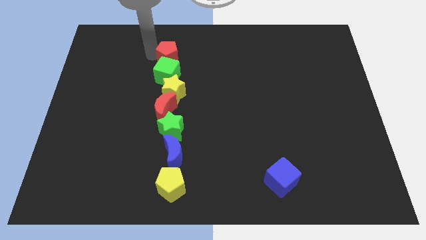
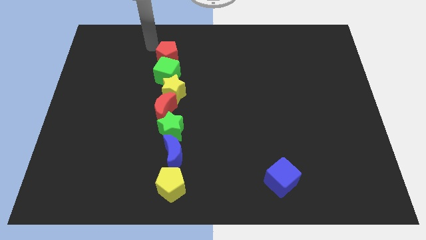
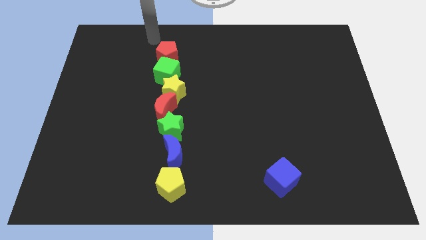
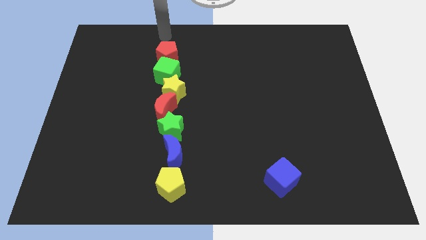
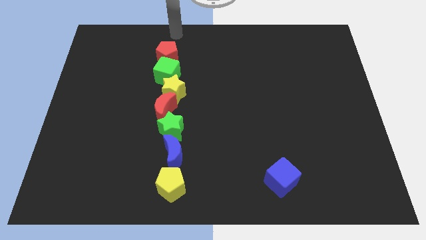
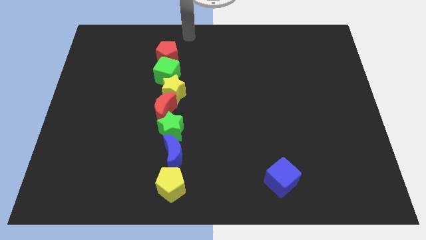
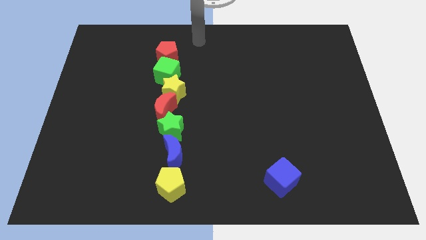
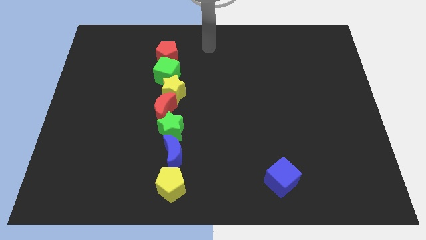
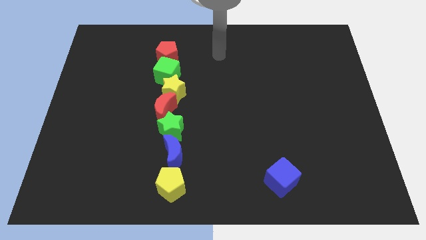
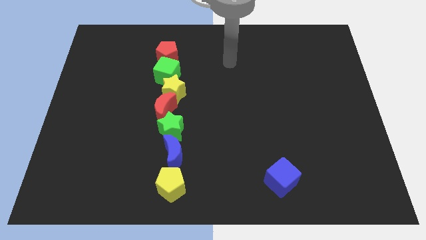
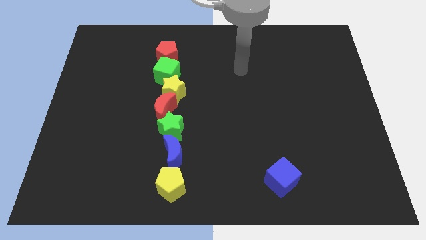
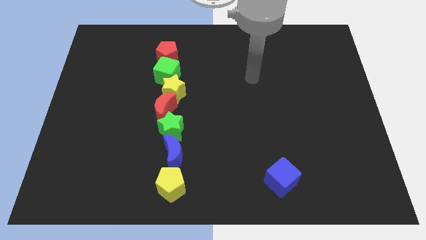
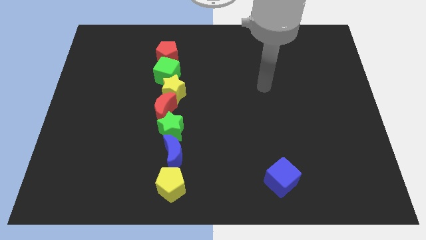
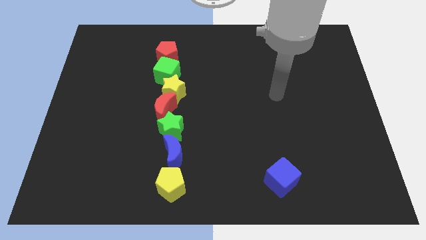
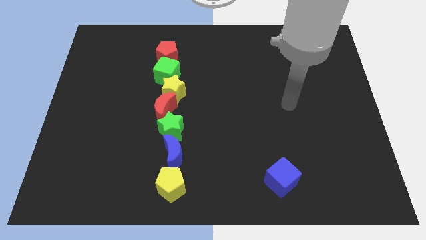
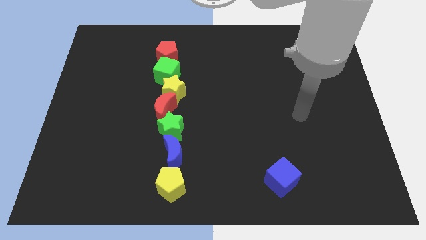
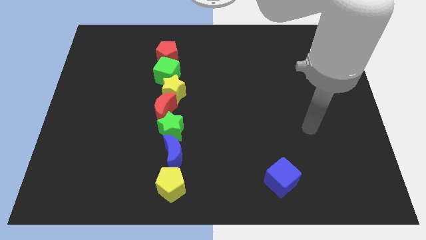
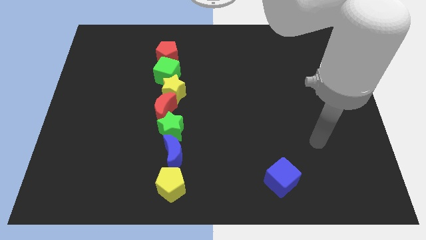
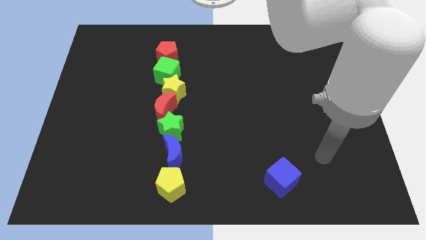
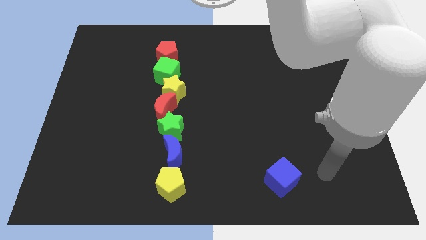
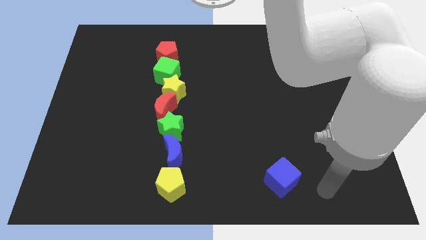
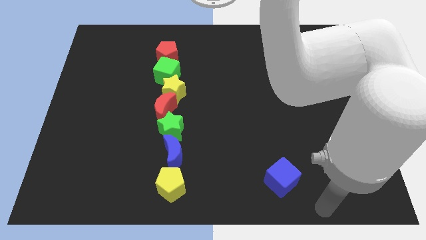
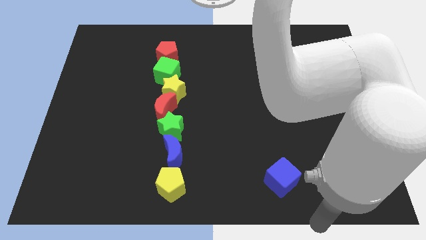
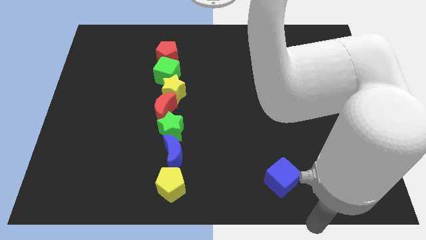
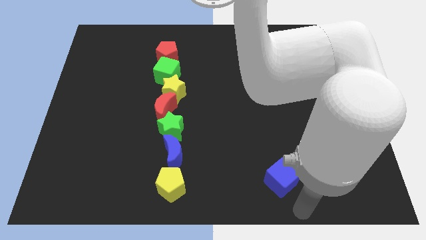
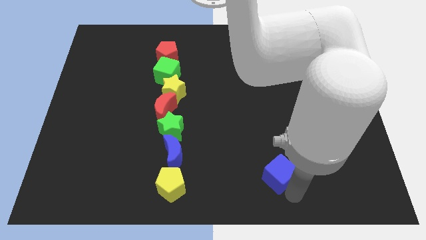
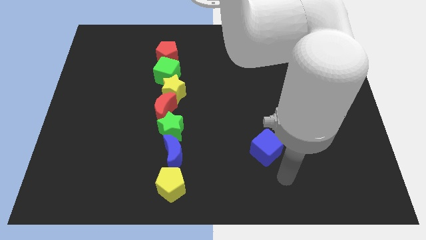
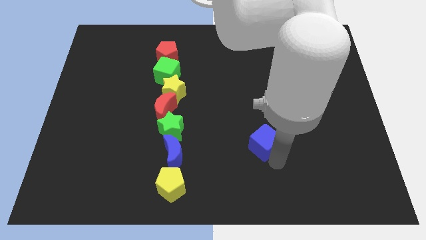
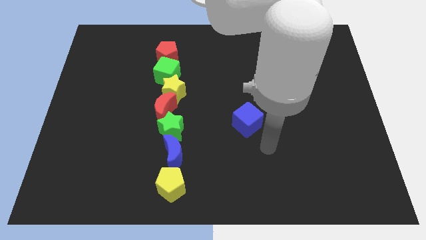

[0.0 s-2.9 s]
move the arm to the bottom of the blue cube

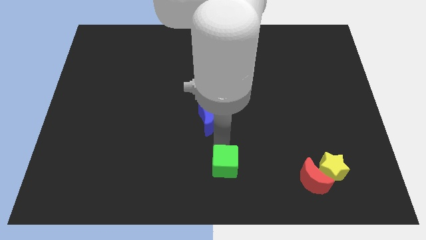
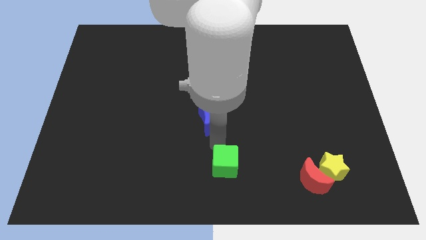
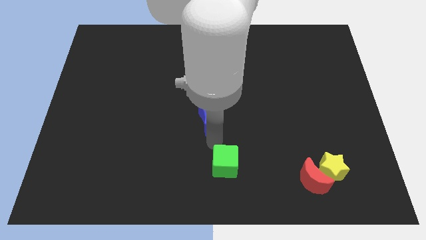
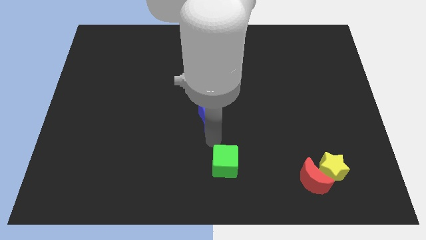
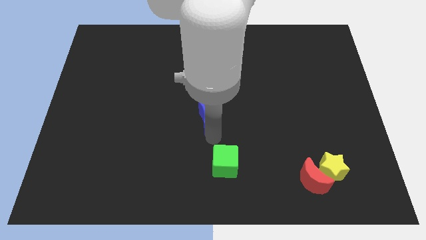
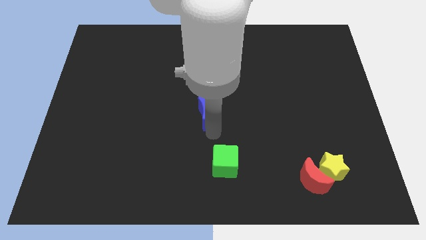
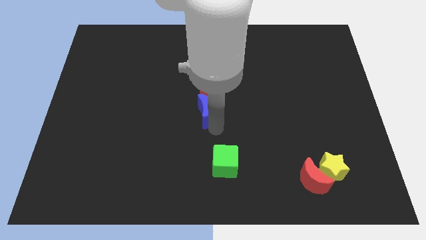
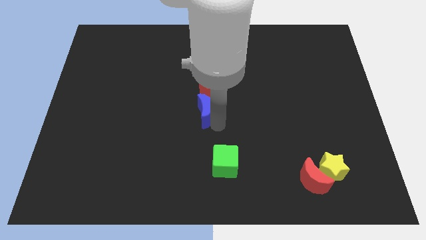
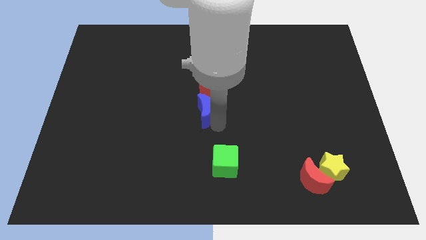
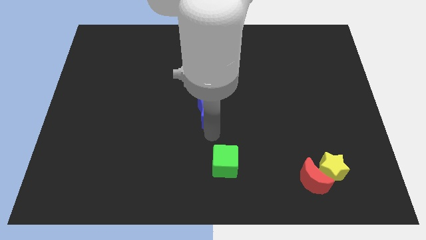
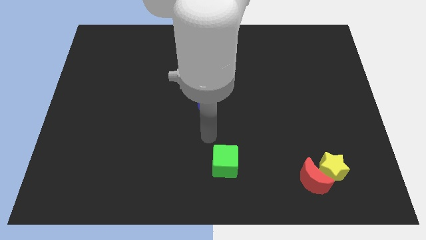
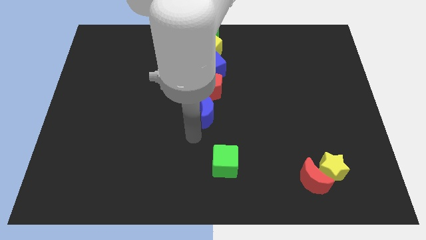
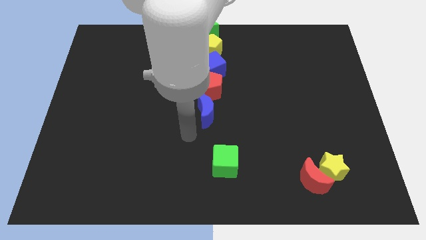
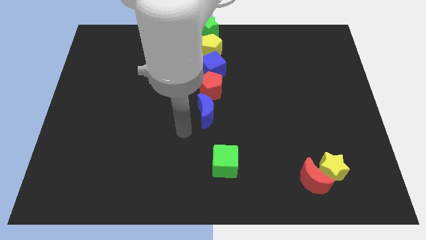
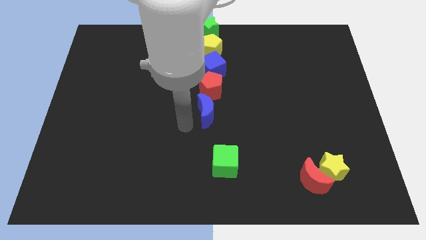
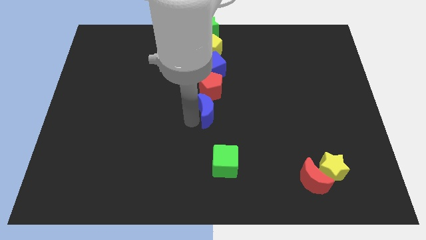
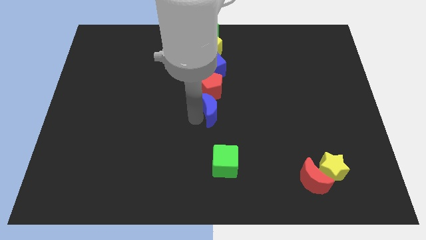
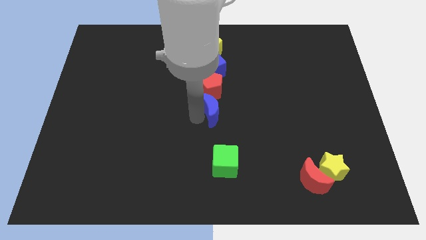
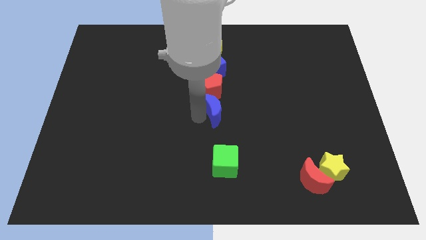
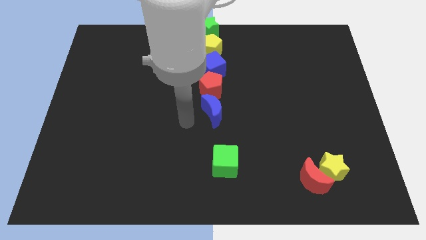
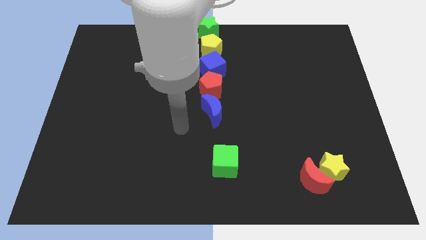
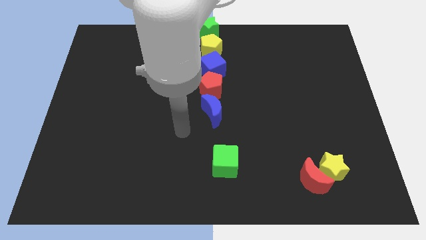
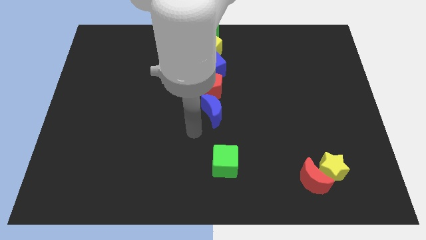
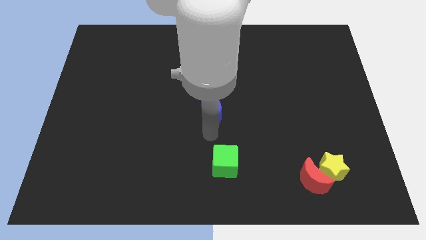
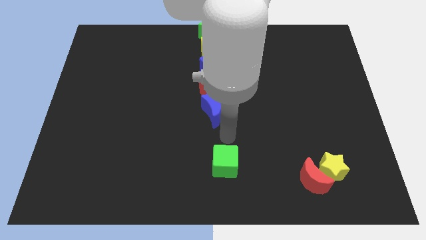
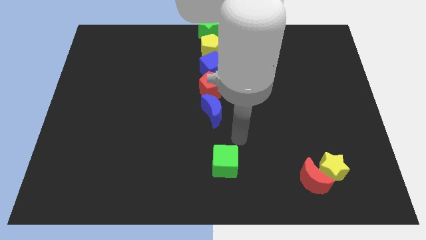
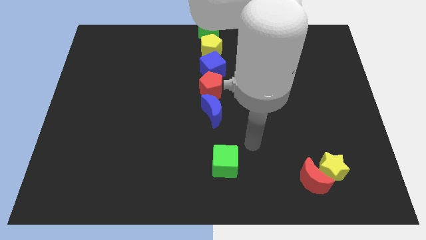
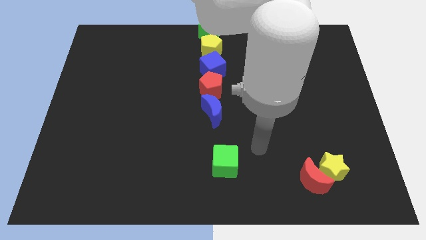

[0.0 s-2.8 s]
adjust the blue crescent below the red pentagon to form a vertical line

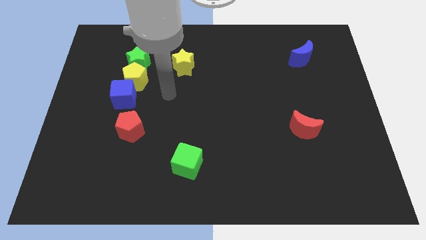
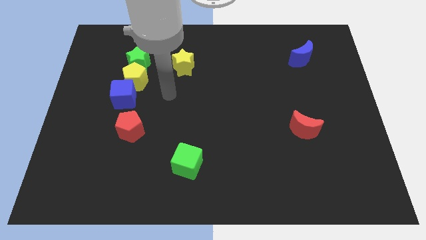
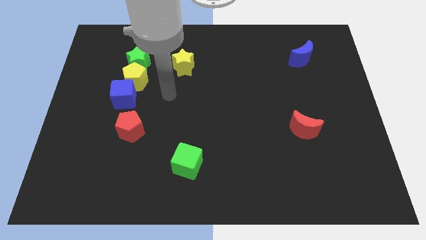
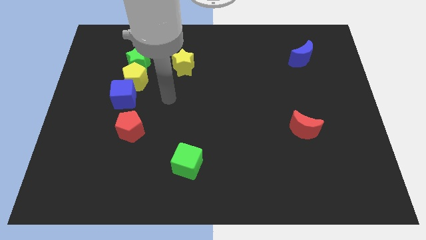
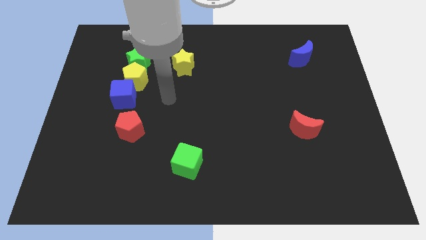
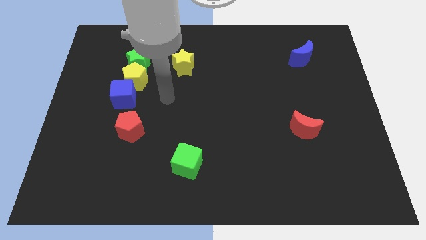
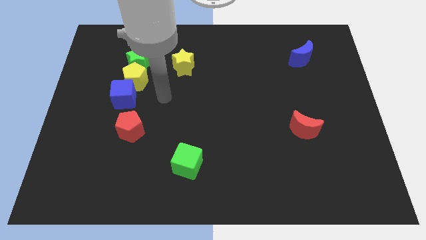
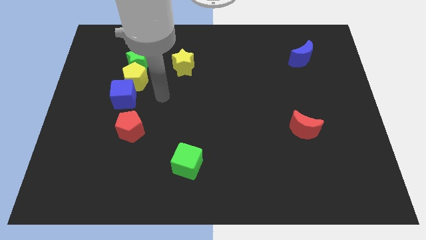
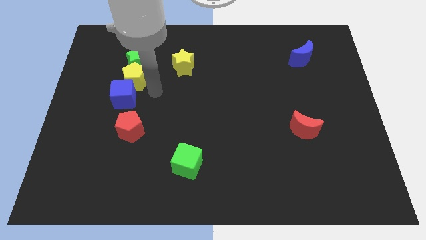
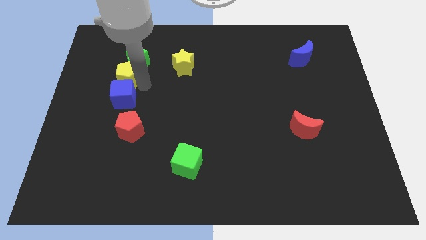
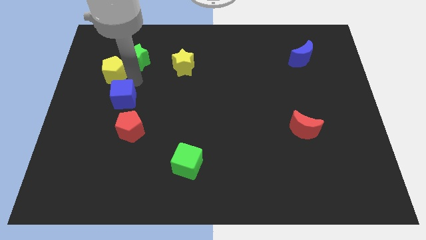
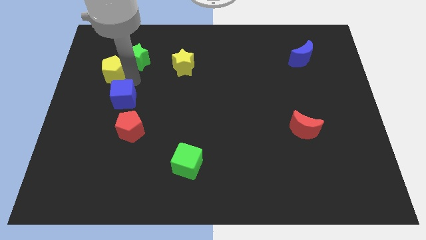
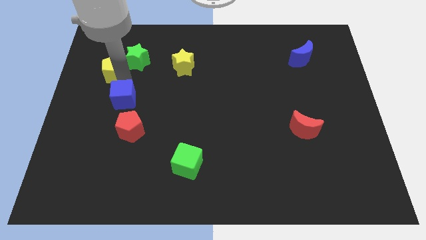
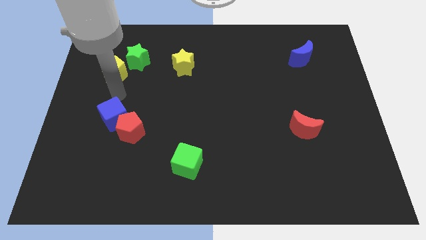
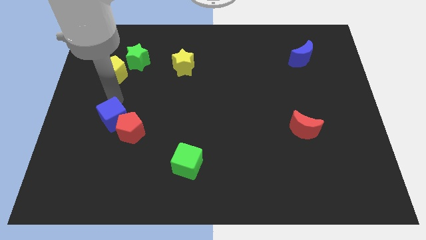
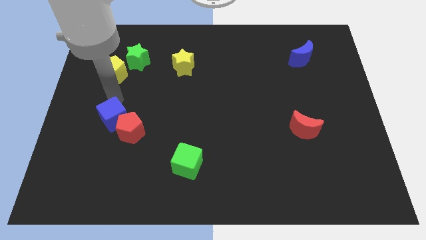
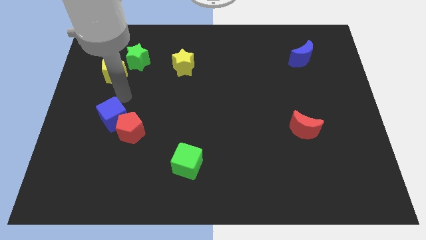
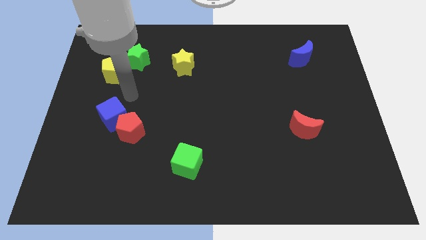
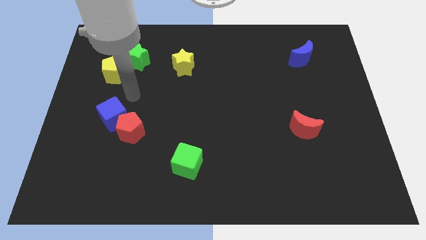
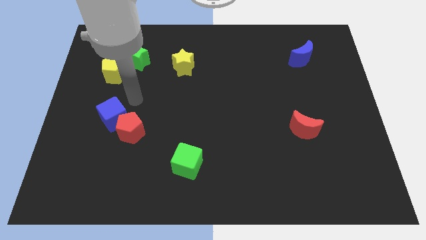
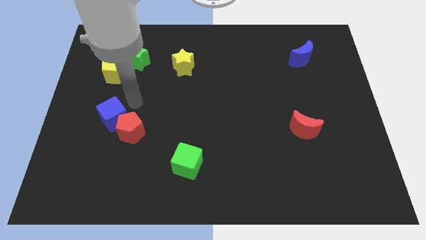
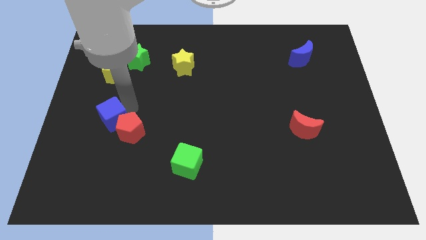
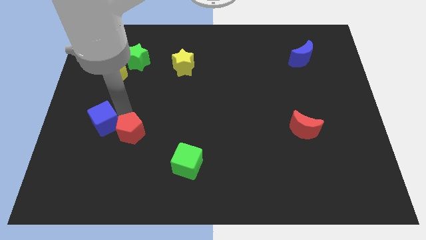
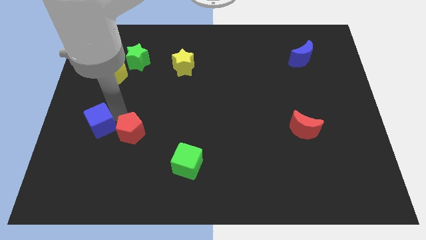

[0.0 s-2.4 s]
move the yellow pentagon towards the bottom left of the green star

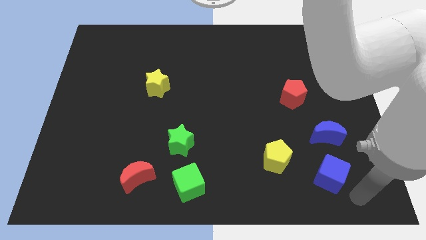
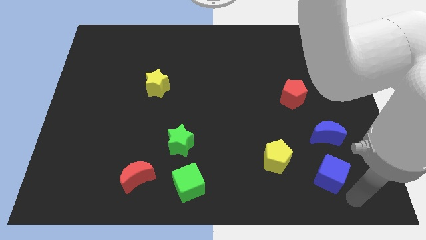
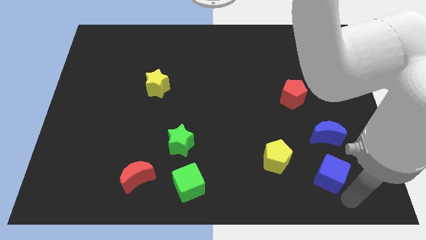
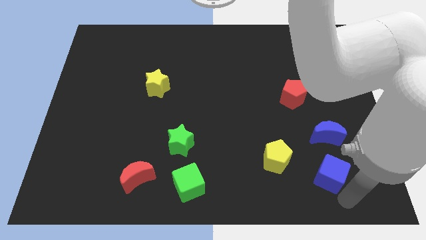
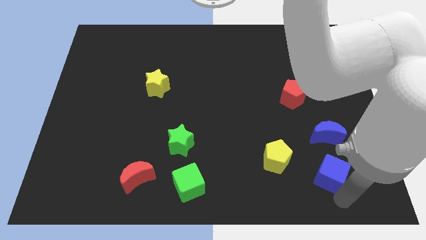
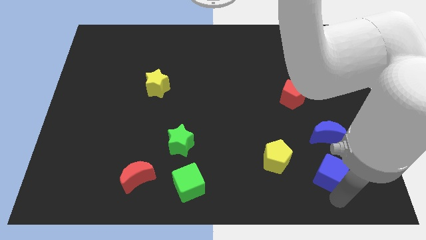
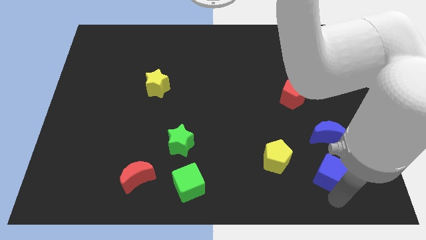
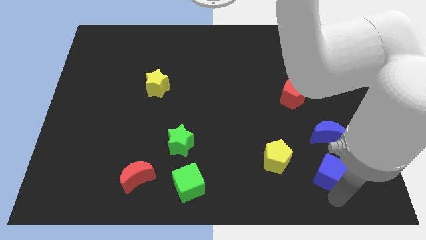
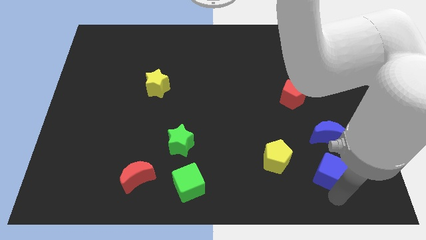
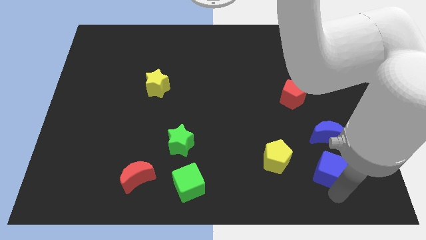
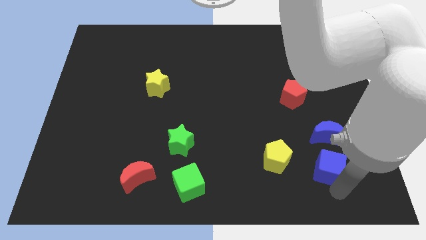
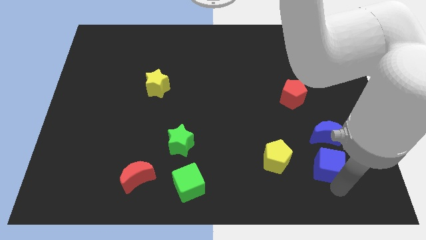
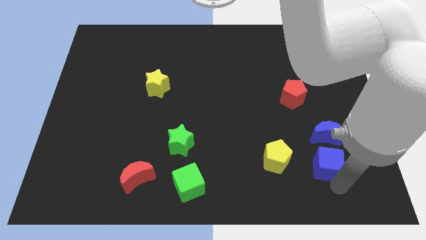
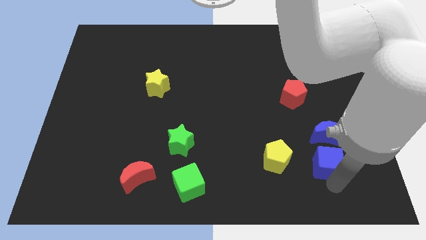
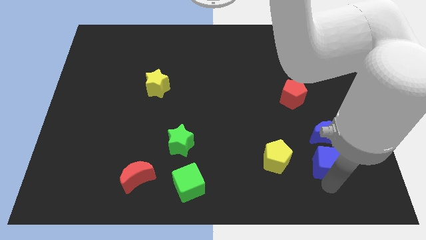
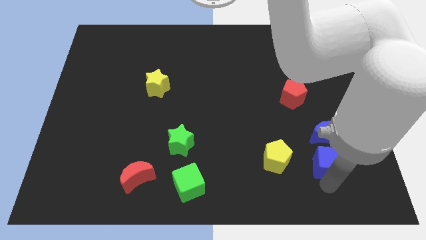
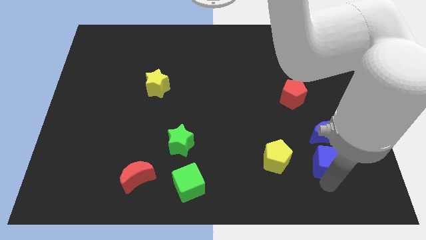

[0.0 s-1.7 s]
move the blue cube close to blue moon
